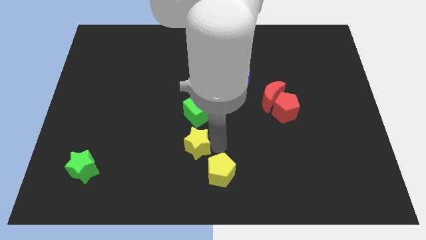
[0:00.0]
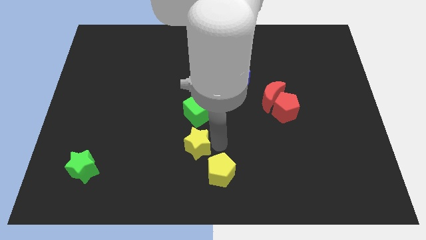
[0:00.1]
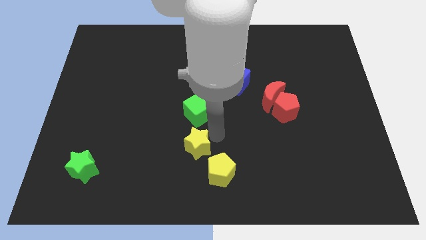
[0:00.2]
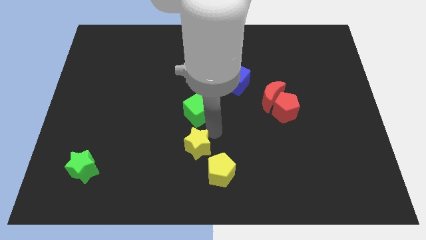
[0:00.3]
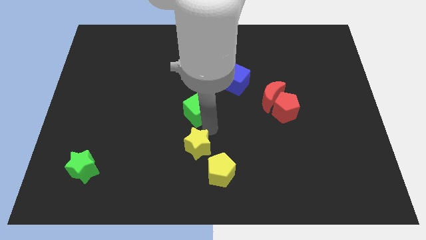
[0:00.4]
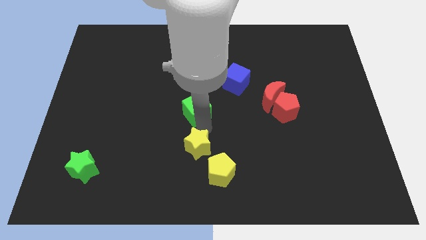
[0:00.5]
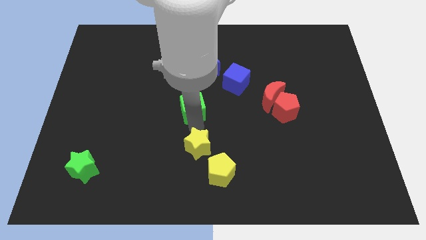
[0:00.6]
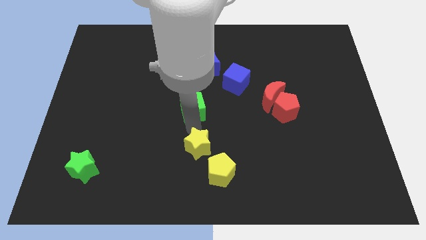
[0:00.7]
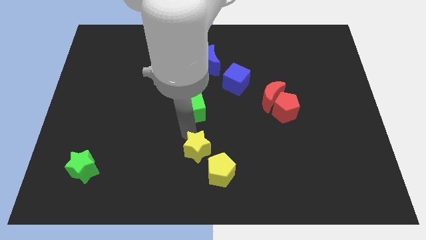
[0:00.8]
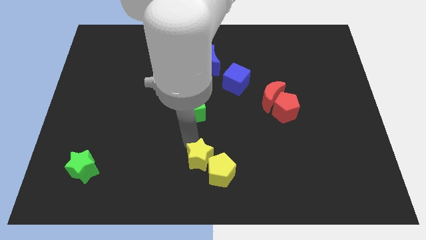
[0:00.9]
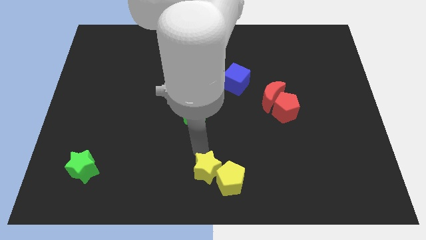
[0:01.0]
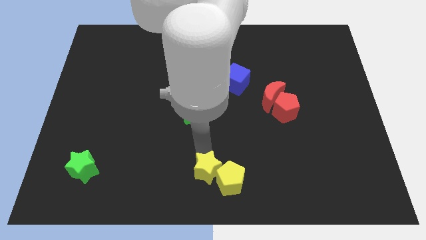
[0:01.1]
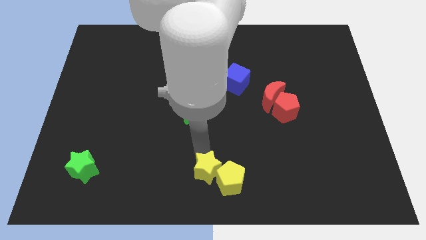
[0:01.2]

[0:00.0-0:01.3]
push the yellow star into the yellow pentagon

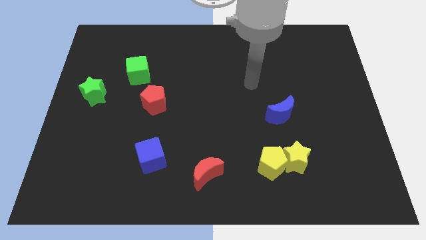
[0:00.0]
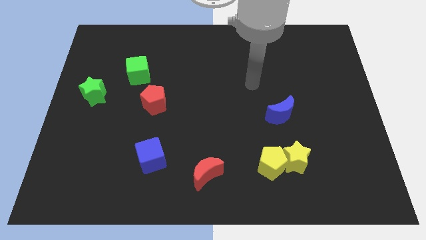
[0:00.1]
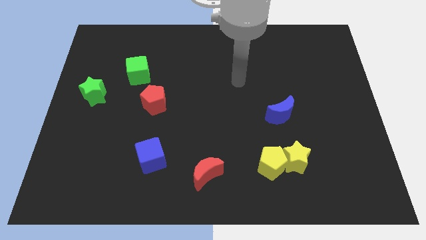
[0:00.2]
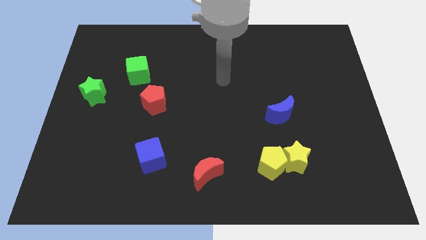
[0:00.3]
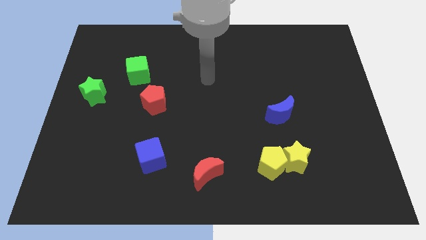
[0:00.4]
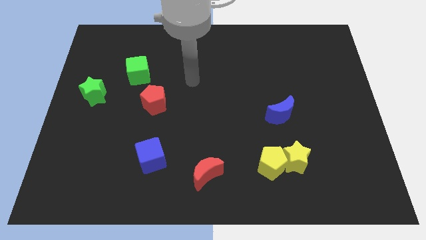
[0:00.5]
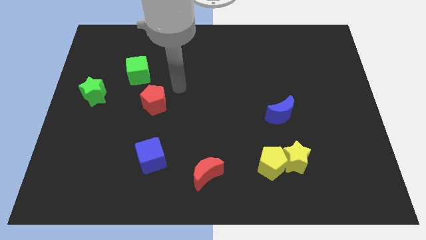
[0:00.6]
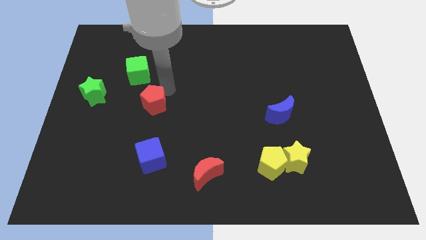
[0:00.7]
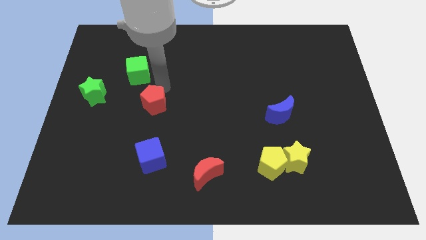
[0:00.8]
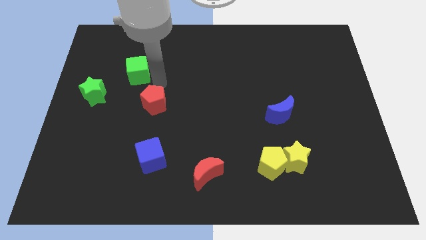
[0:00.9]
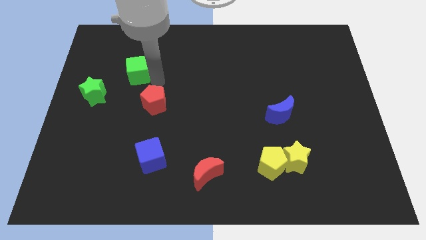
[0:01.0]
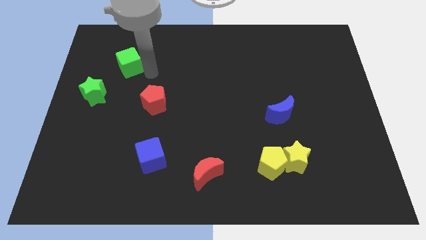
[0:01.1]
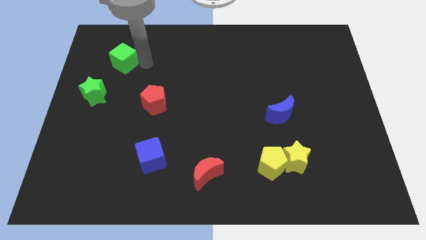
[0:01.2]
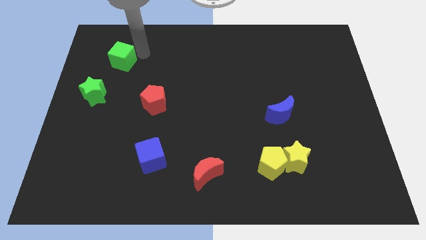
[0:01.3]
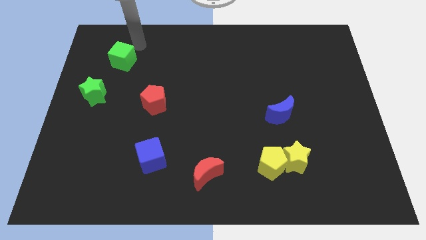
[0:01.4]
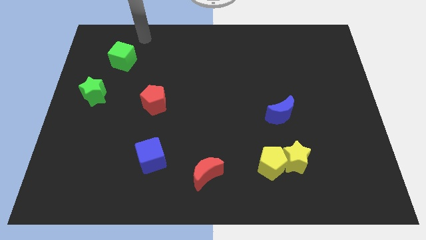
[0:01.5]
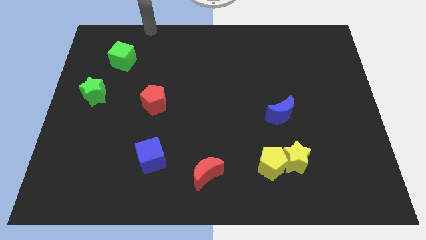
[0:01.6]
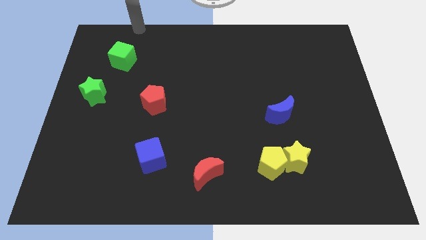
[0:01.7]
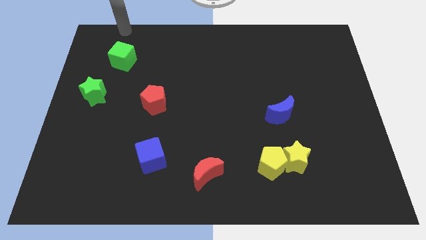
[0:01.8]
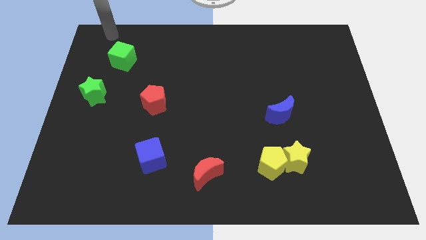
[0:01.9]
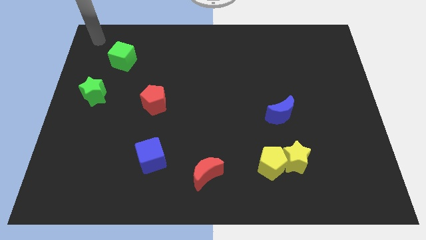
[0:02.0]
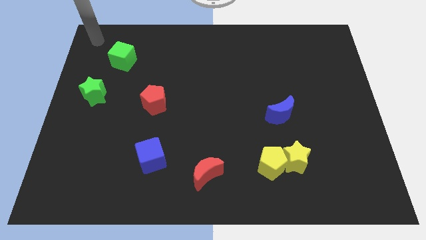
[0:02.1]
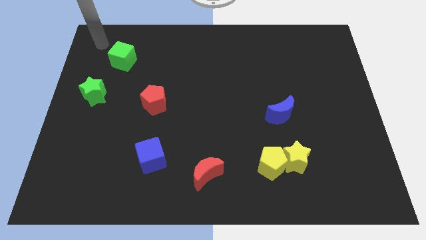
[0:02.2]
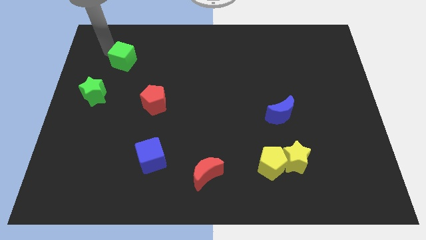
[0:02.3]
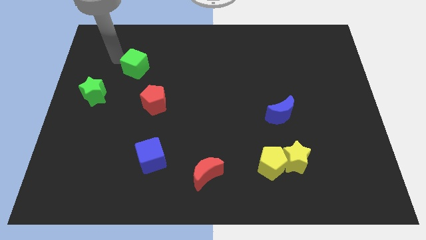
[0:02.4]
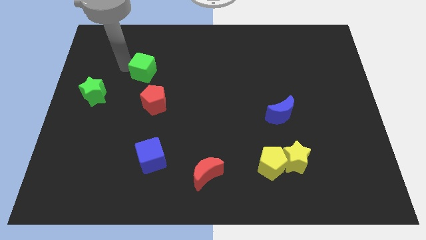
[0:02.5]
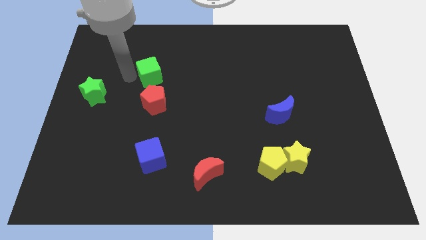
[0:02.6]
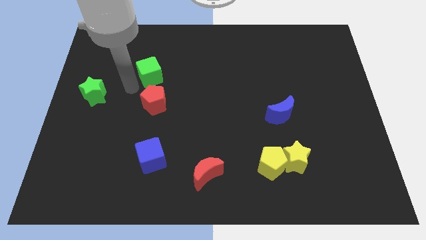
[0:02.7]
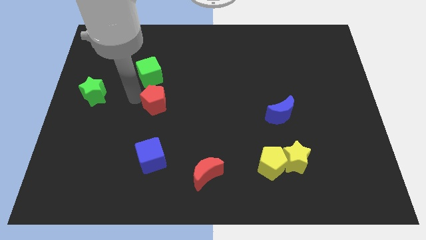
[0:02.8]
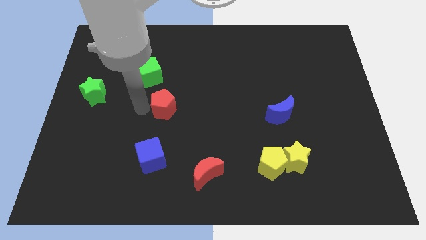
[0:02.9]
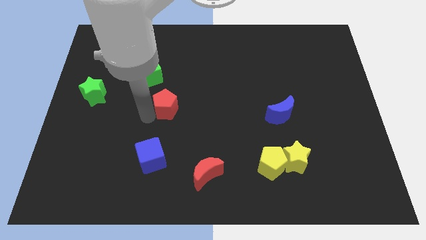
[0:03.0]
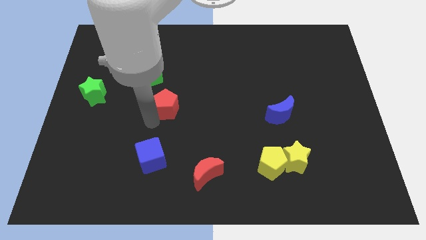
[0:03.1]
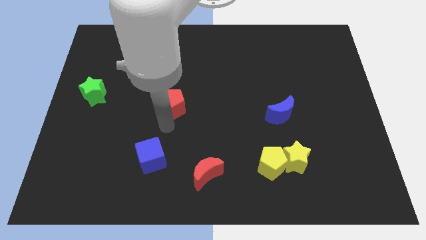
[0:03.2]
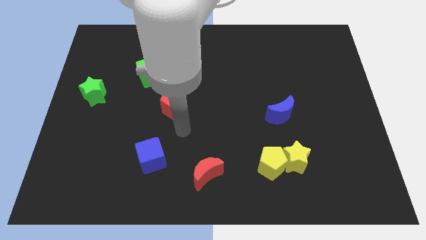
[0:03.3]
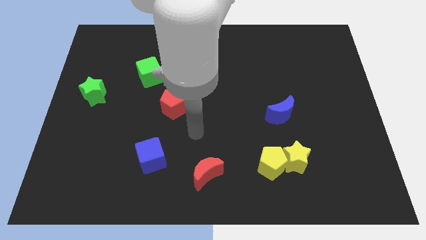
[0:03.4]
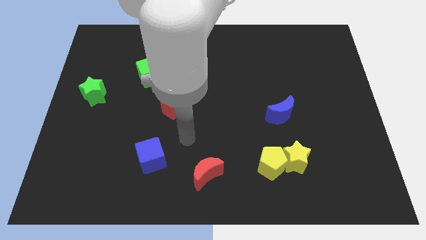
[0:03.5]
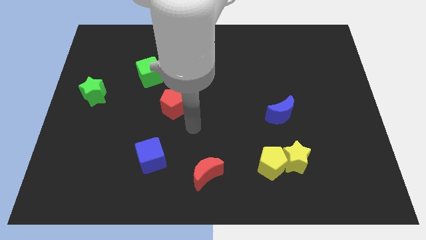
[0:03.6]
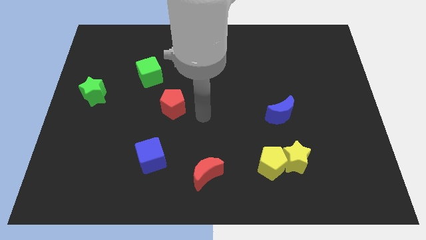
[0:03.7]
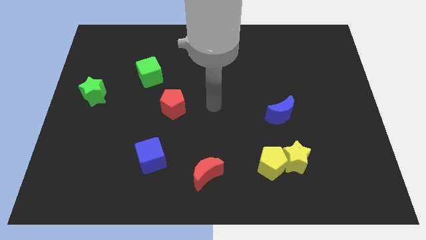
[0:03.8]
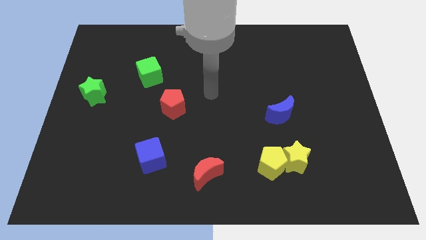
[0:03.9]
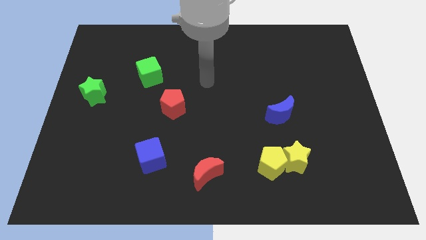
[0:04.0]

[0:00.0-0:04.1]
slightly move the green cube and the red pentagon to the right

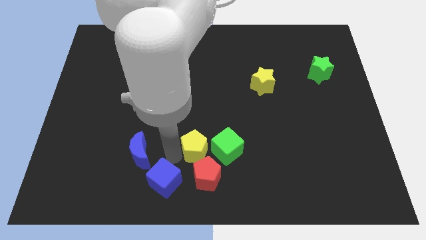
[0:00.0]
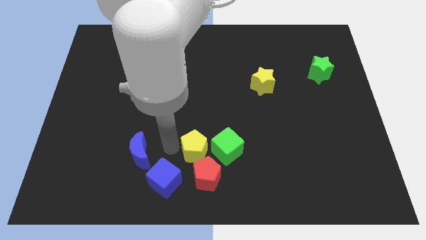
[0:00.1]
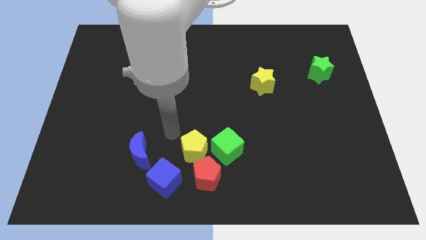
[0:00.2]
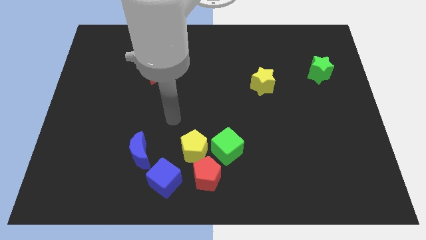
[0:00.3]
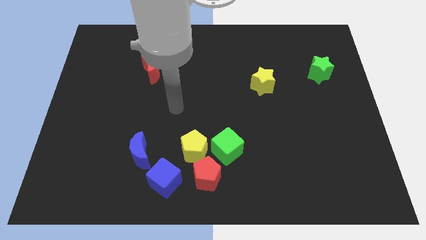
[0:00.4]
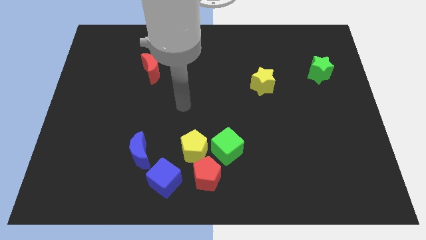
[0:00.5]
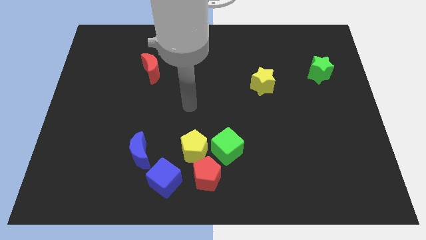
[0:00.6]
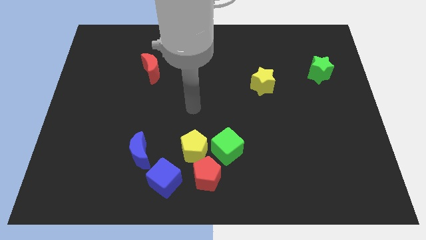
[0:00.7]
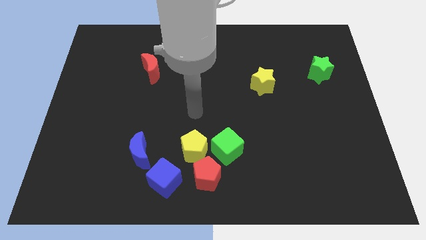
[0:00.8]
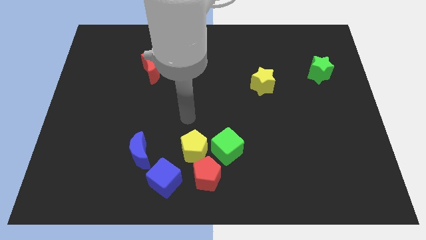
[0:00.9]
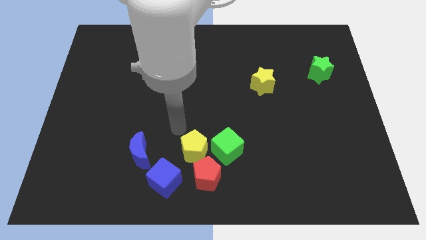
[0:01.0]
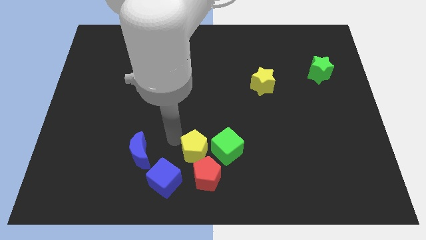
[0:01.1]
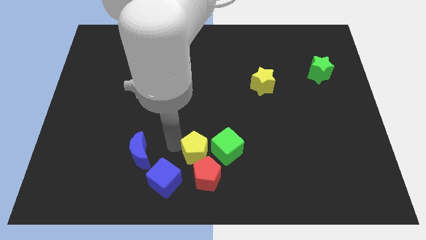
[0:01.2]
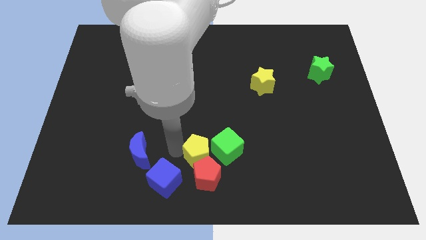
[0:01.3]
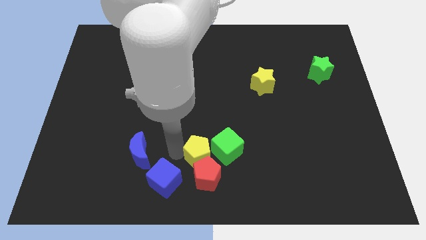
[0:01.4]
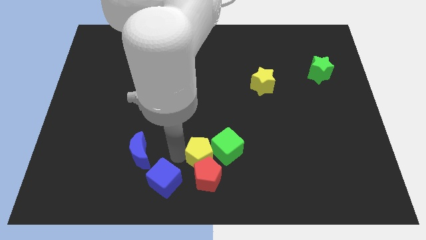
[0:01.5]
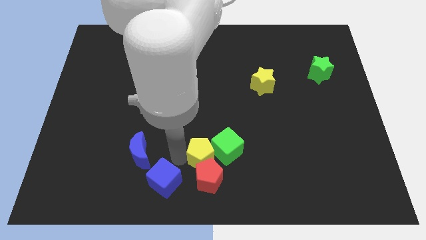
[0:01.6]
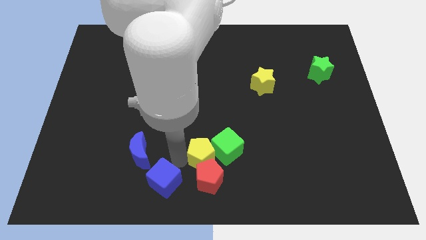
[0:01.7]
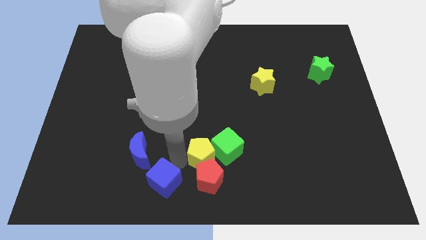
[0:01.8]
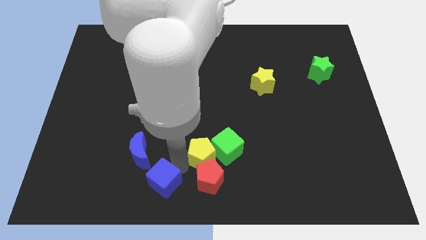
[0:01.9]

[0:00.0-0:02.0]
push yellow pentagon into the red pentagon

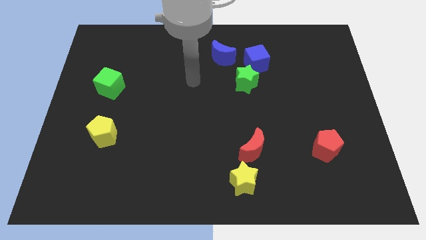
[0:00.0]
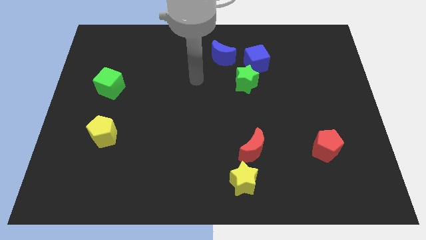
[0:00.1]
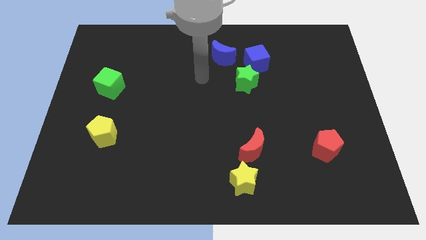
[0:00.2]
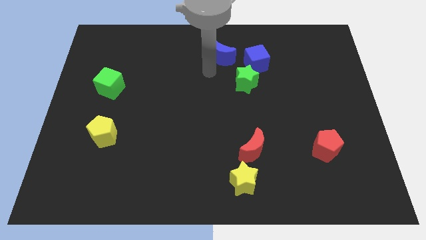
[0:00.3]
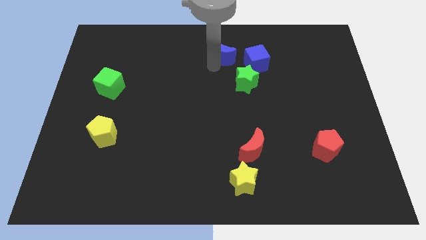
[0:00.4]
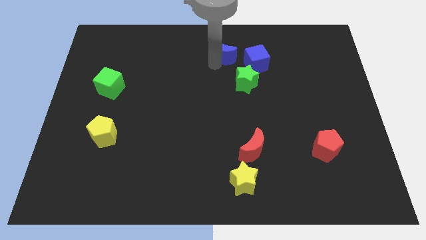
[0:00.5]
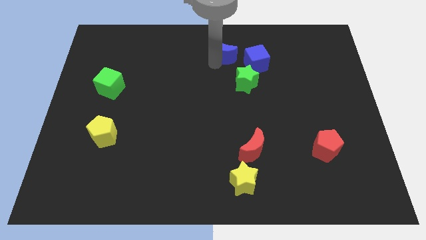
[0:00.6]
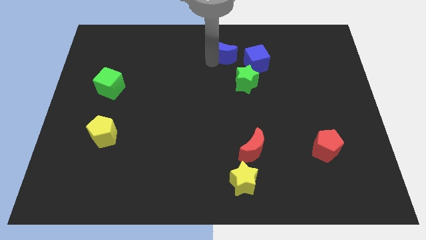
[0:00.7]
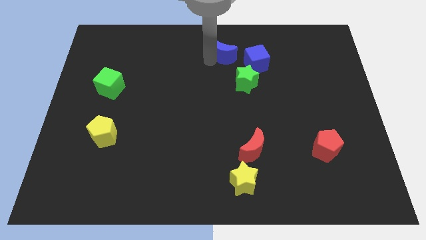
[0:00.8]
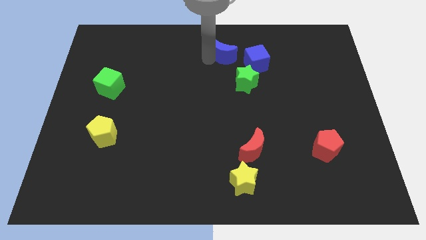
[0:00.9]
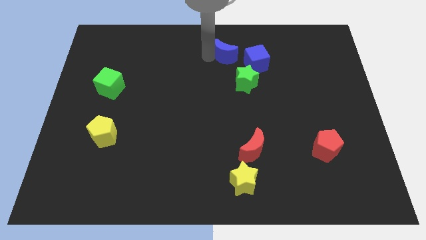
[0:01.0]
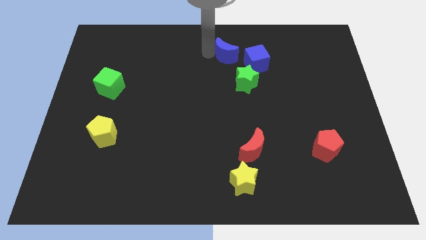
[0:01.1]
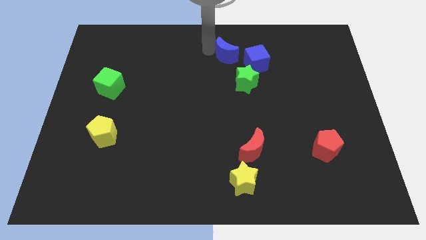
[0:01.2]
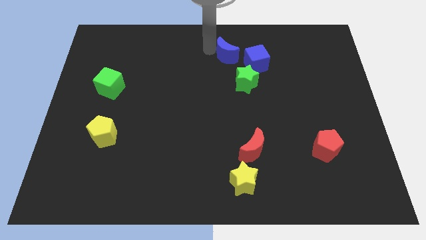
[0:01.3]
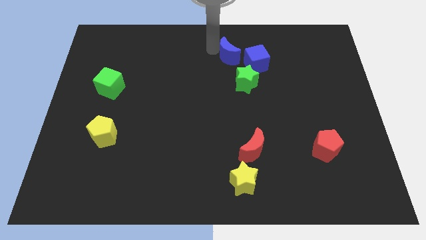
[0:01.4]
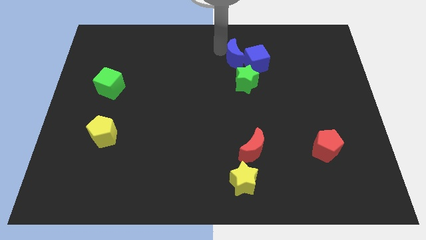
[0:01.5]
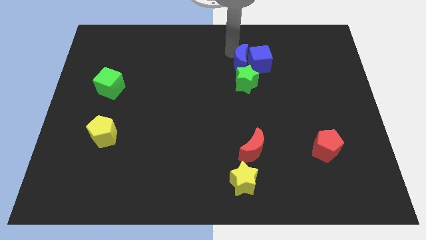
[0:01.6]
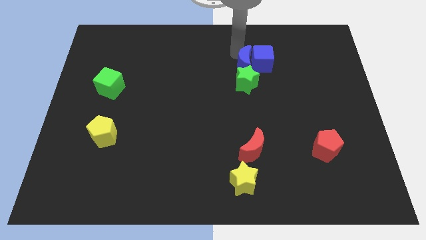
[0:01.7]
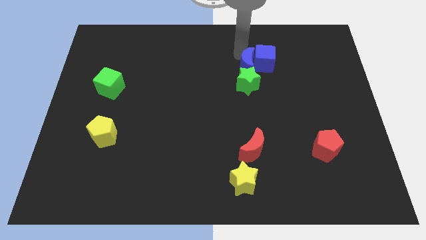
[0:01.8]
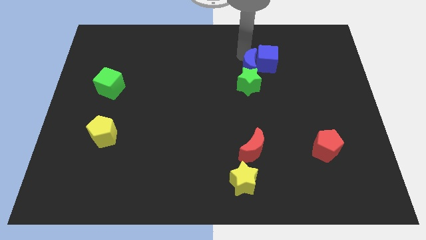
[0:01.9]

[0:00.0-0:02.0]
push the blue crescent into the blue cube
